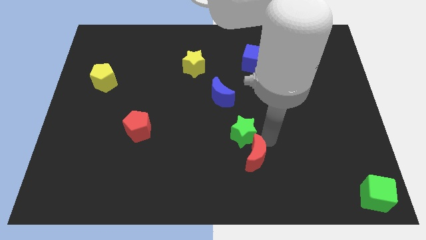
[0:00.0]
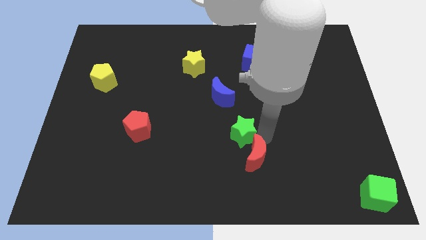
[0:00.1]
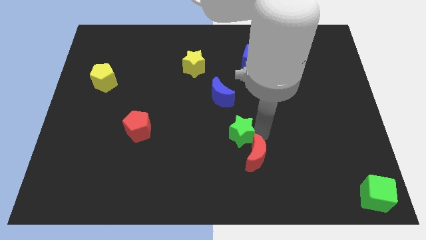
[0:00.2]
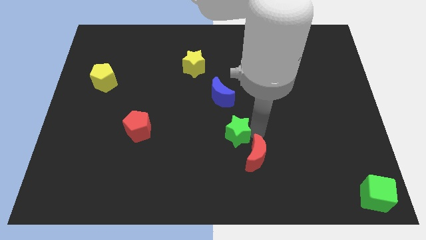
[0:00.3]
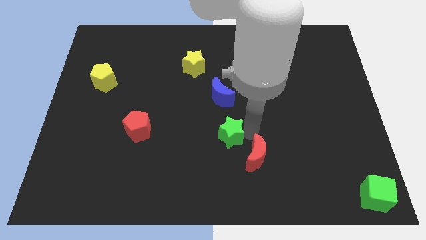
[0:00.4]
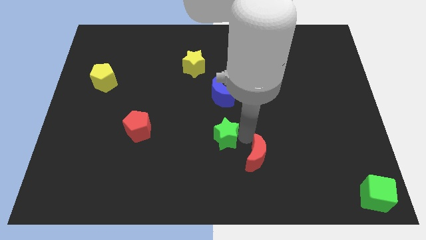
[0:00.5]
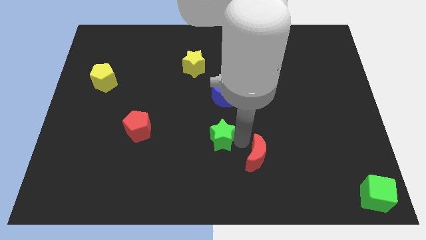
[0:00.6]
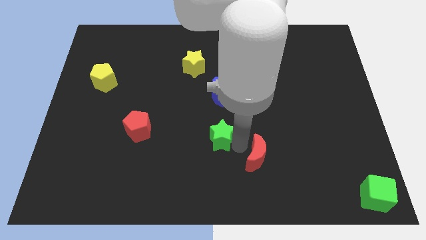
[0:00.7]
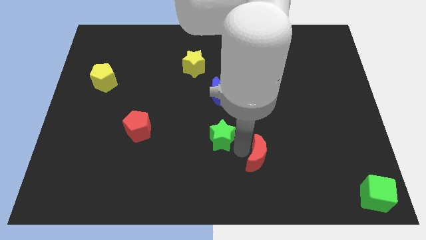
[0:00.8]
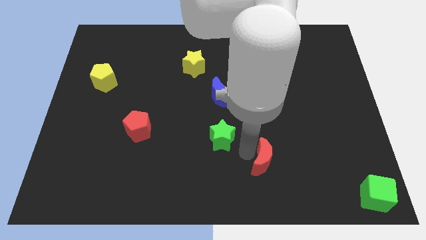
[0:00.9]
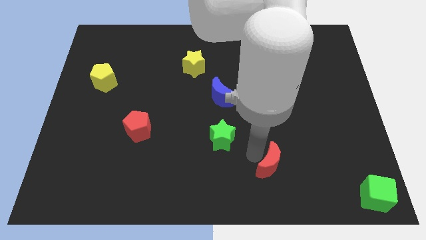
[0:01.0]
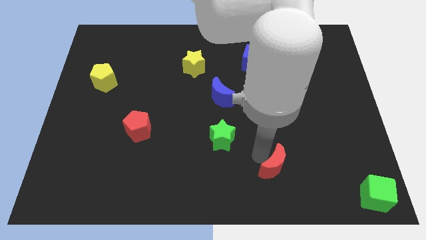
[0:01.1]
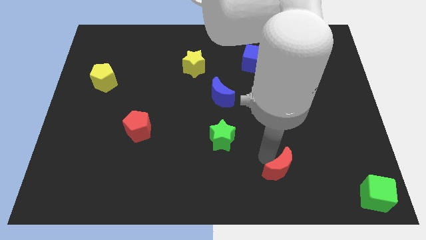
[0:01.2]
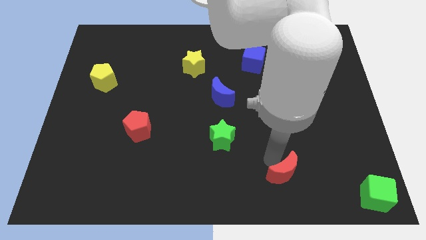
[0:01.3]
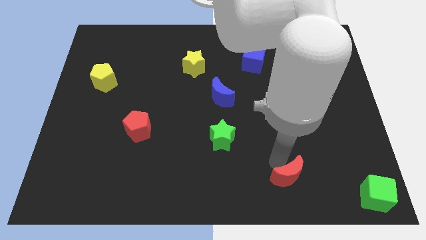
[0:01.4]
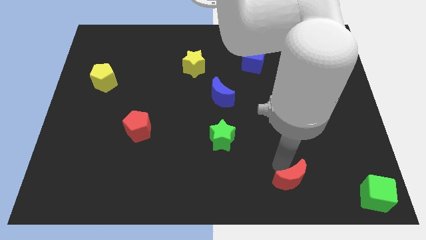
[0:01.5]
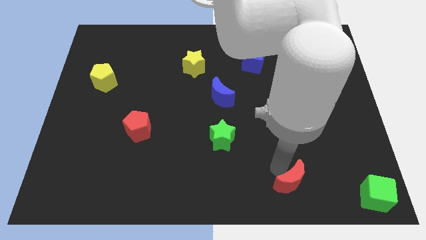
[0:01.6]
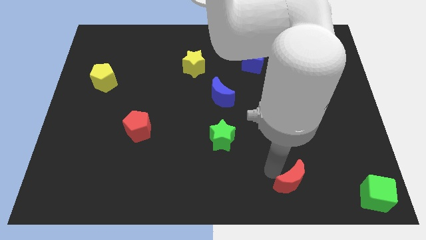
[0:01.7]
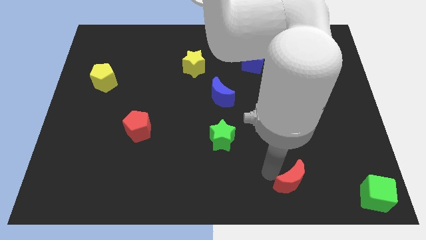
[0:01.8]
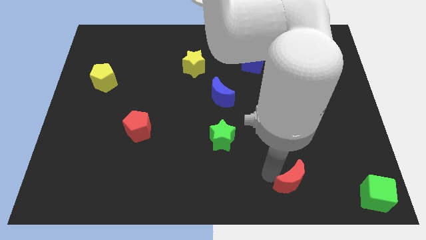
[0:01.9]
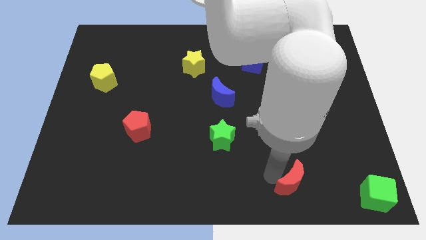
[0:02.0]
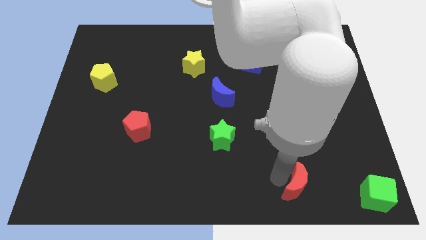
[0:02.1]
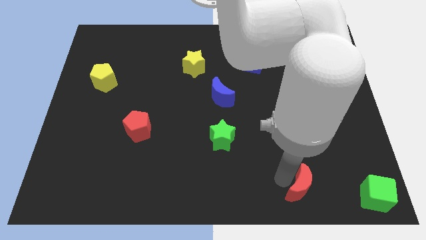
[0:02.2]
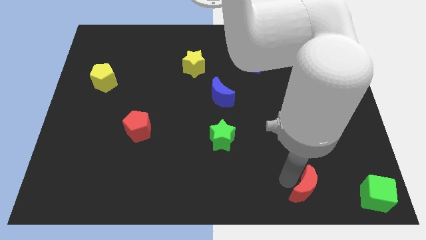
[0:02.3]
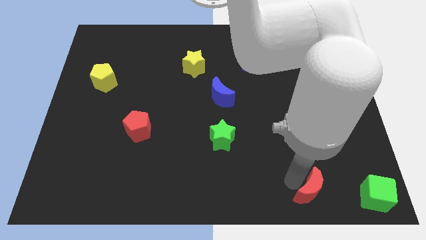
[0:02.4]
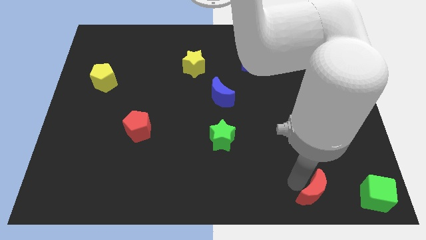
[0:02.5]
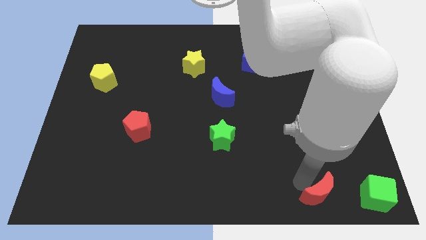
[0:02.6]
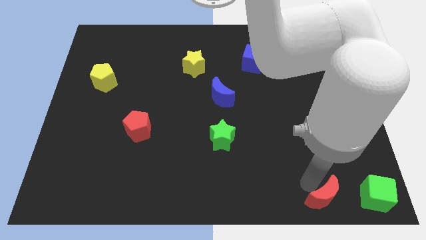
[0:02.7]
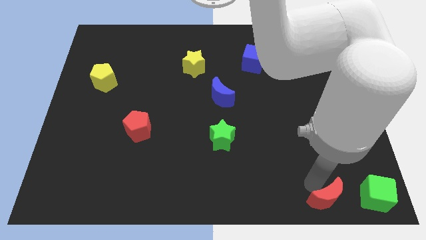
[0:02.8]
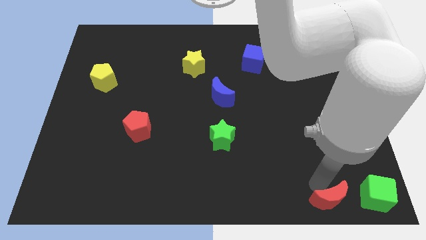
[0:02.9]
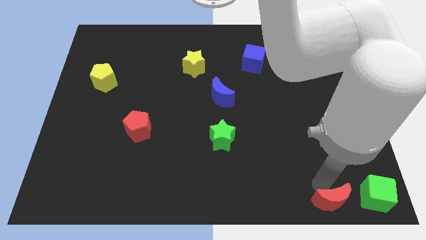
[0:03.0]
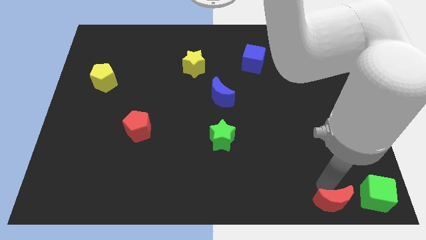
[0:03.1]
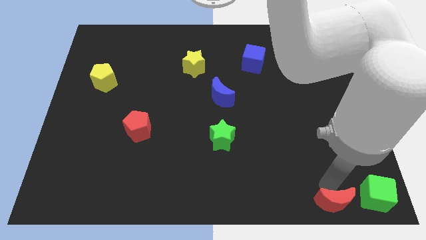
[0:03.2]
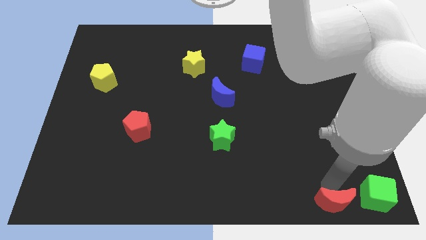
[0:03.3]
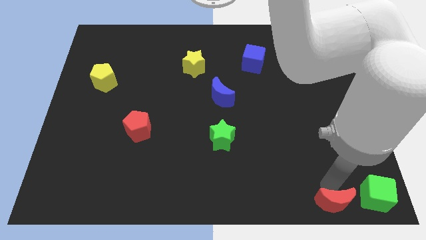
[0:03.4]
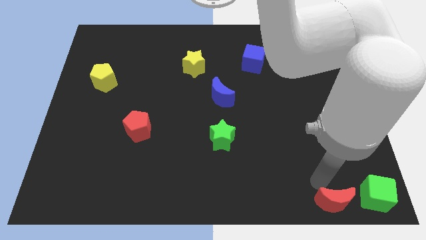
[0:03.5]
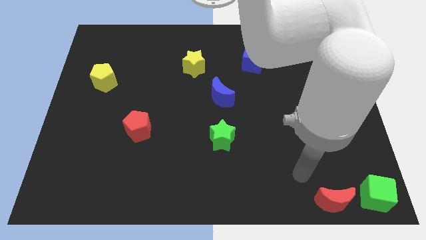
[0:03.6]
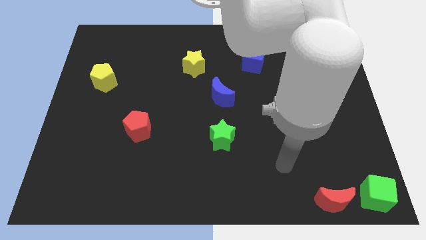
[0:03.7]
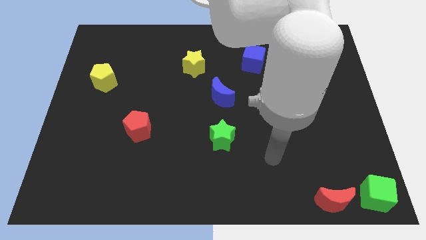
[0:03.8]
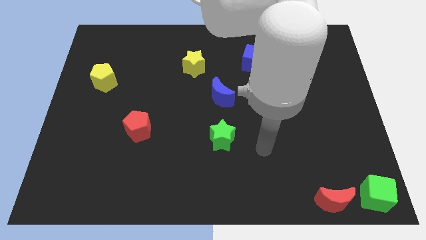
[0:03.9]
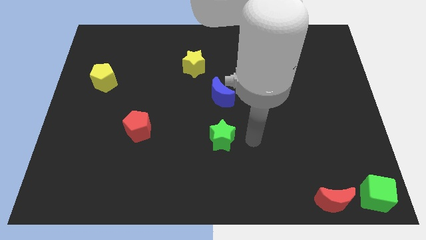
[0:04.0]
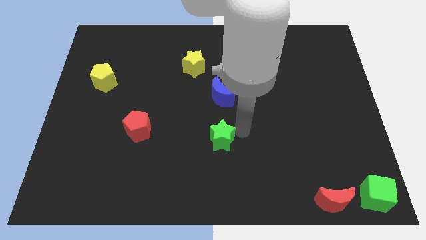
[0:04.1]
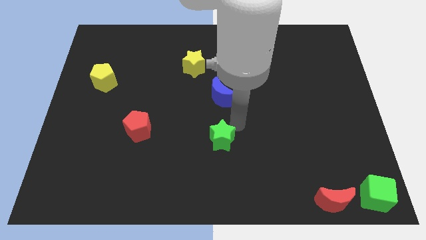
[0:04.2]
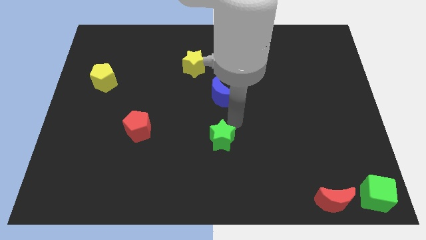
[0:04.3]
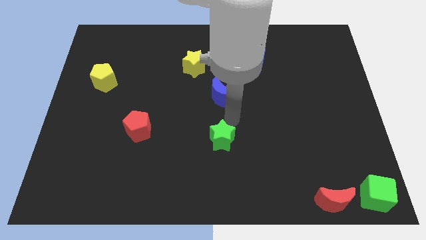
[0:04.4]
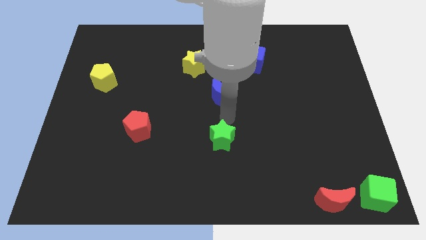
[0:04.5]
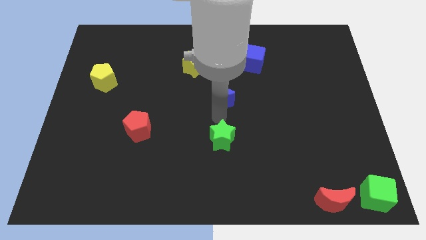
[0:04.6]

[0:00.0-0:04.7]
place the red moon left to the green cube

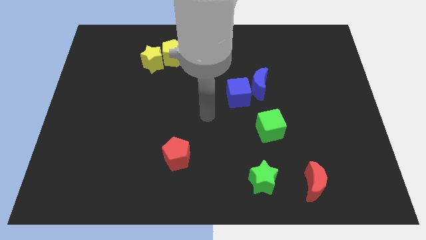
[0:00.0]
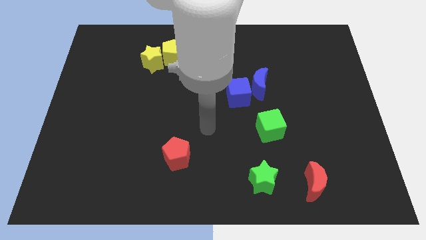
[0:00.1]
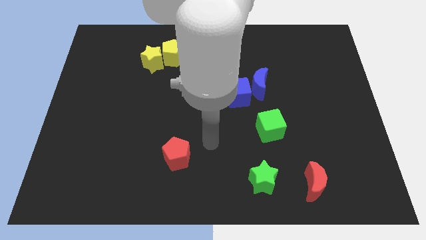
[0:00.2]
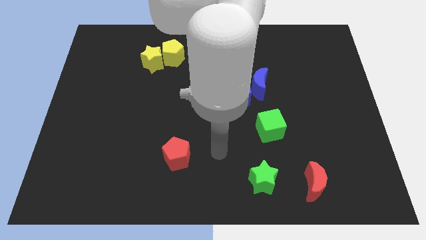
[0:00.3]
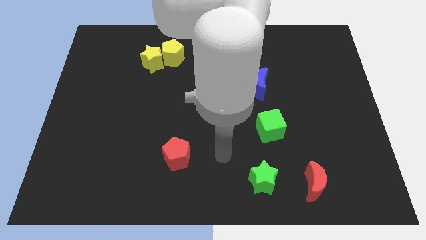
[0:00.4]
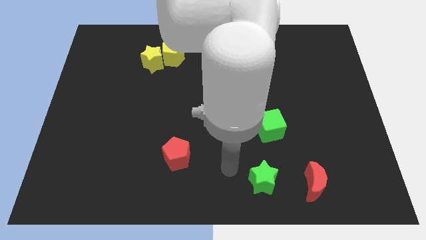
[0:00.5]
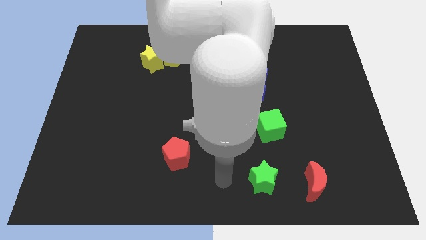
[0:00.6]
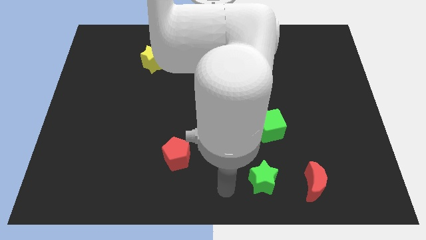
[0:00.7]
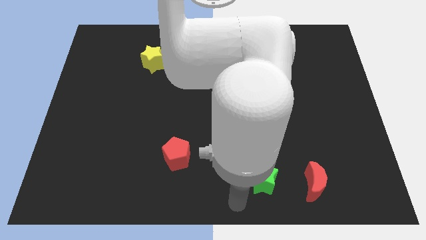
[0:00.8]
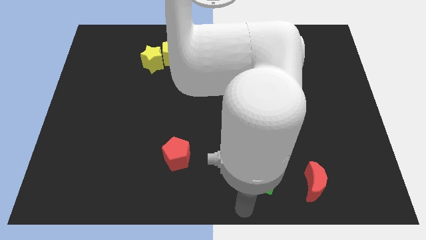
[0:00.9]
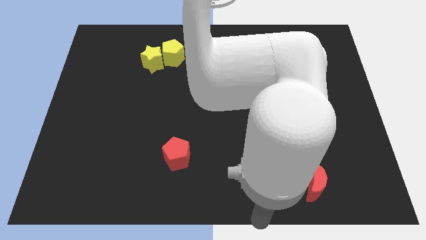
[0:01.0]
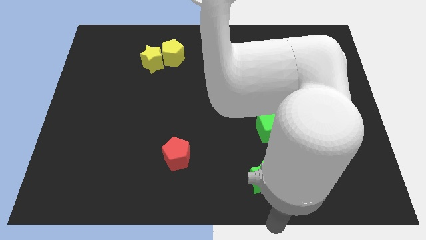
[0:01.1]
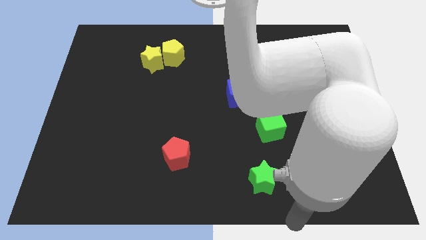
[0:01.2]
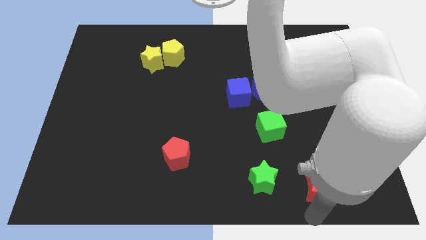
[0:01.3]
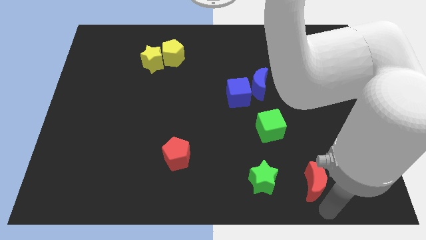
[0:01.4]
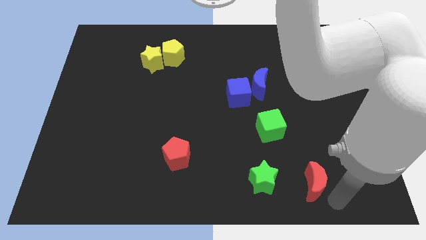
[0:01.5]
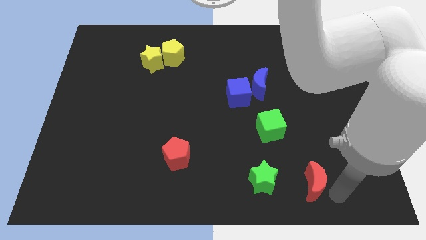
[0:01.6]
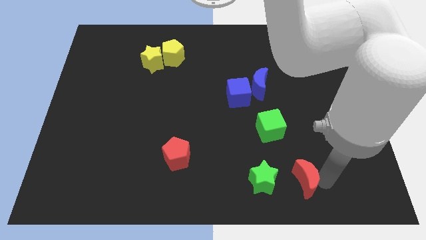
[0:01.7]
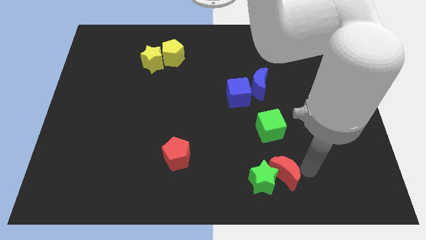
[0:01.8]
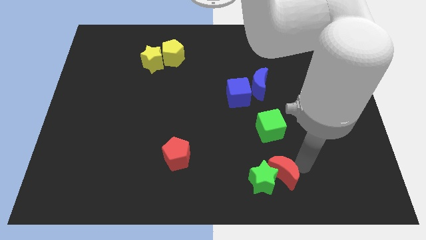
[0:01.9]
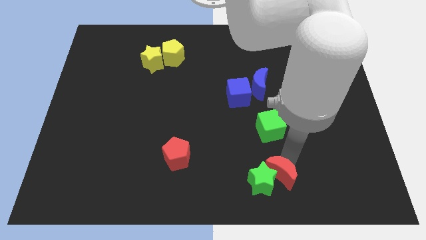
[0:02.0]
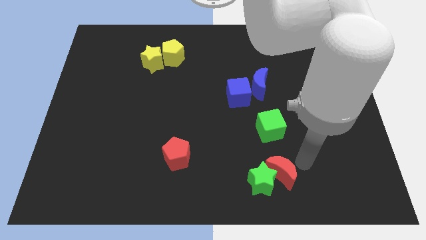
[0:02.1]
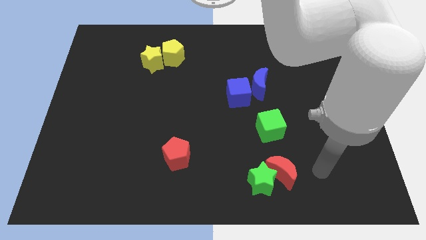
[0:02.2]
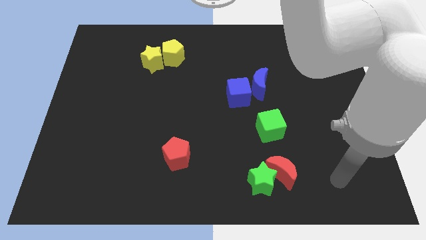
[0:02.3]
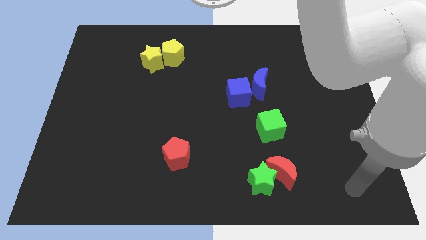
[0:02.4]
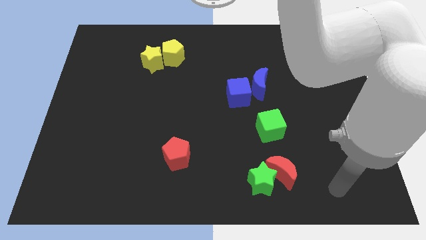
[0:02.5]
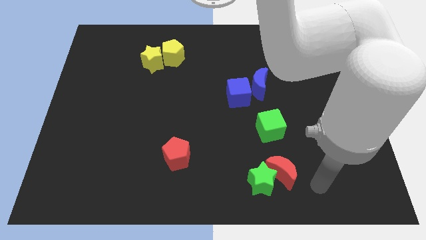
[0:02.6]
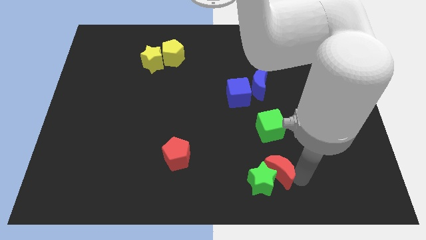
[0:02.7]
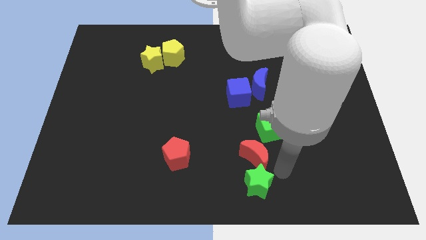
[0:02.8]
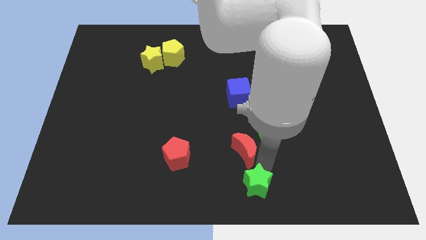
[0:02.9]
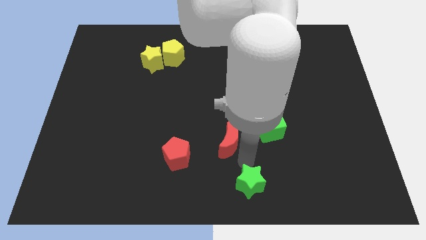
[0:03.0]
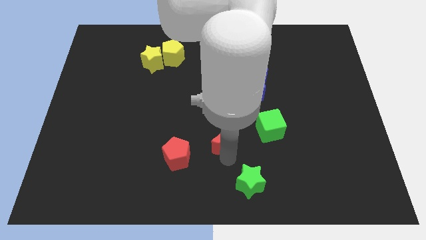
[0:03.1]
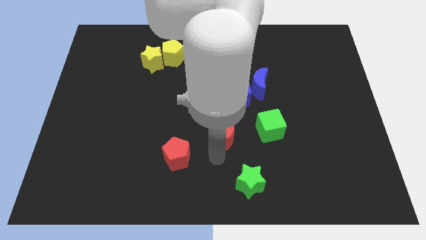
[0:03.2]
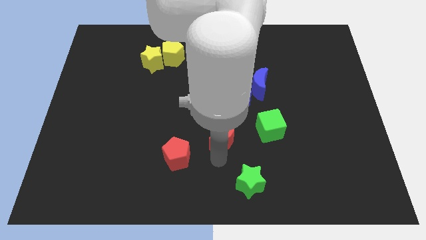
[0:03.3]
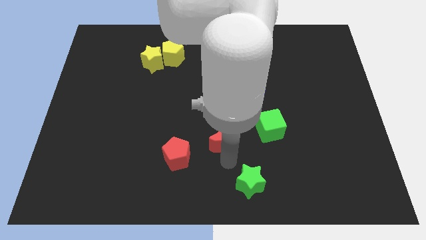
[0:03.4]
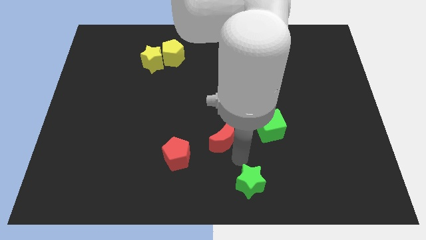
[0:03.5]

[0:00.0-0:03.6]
place the red crescent in the middle of the group of blocks

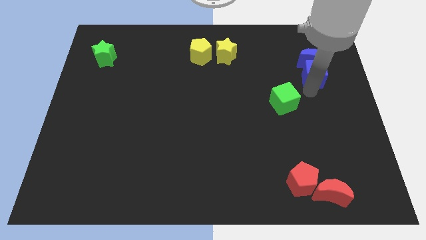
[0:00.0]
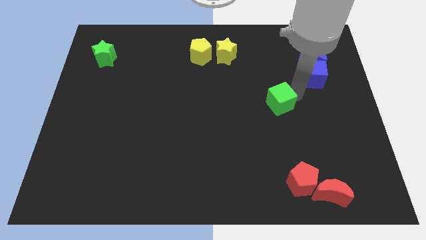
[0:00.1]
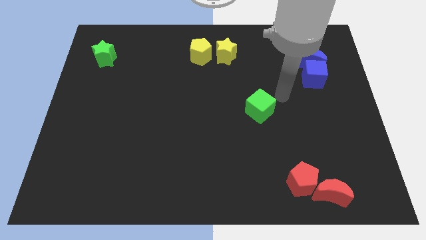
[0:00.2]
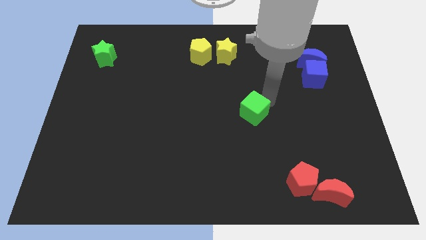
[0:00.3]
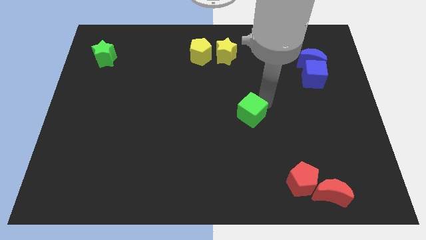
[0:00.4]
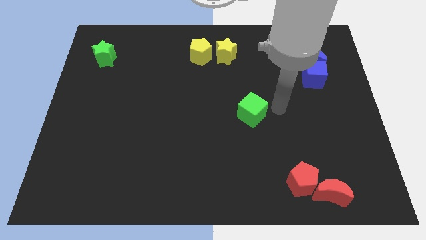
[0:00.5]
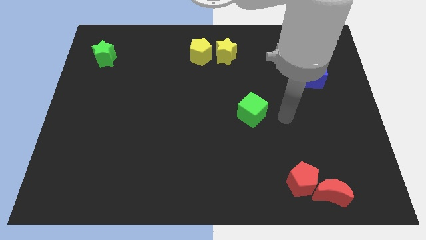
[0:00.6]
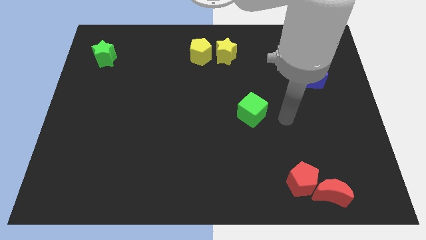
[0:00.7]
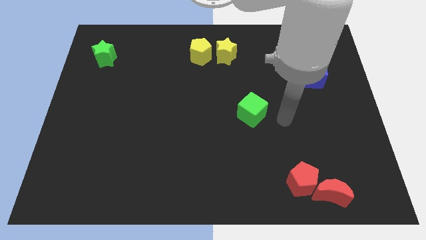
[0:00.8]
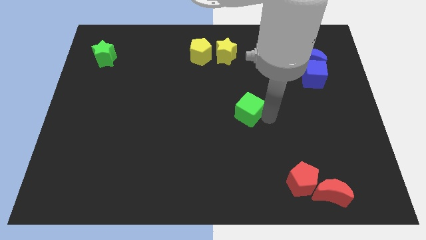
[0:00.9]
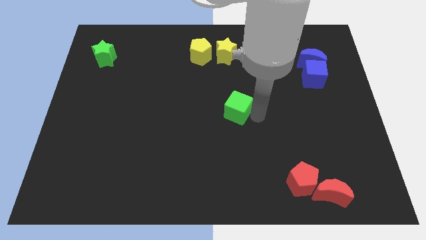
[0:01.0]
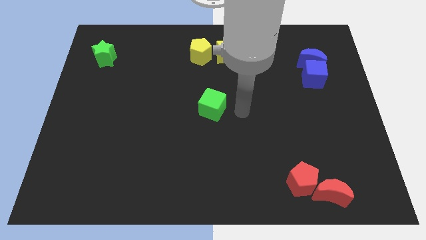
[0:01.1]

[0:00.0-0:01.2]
put the green cube at the center of the board
